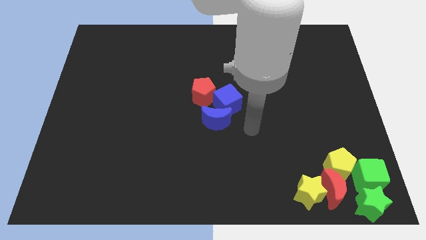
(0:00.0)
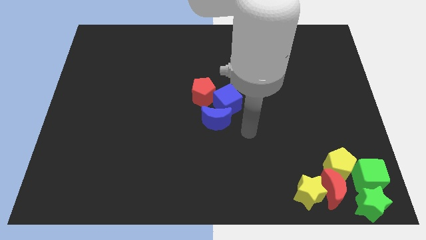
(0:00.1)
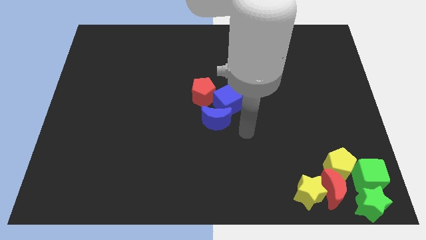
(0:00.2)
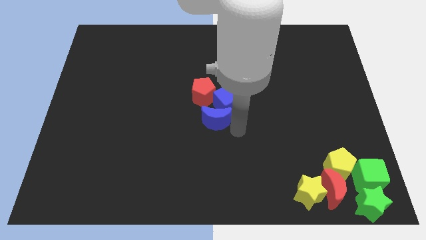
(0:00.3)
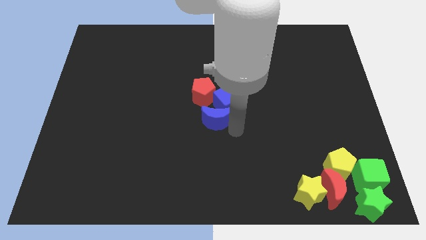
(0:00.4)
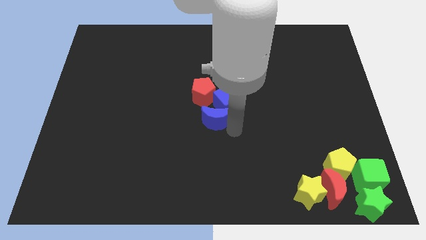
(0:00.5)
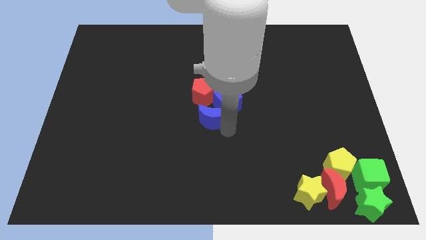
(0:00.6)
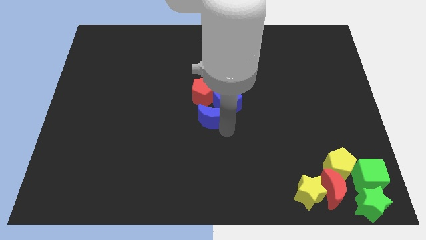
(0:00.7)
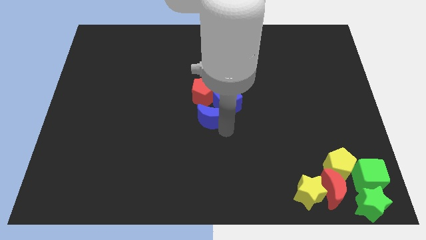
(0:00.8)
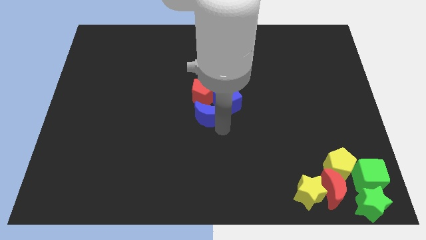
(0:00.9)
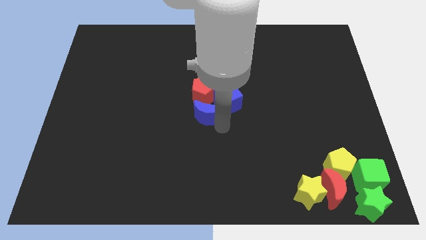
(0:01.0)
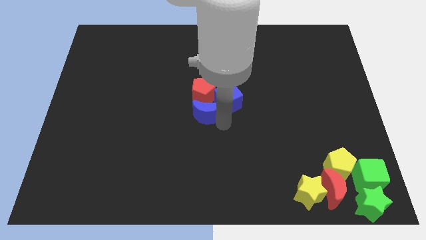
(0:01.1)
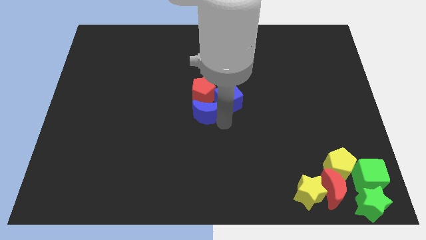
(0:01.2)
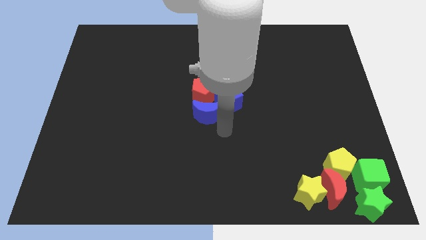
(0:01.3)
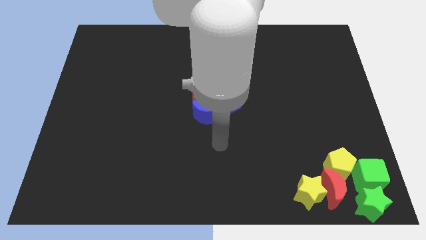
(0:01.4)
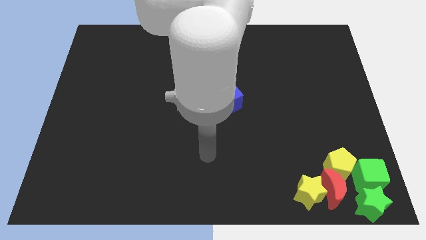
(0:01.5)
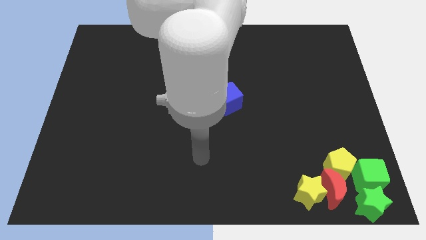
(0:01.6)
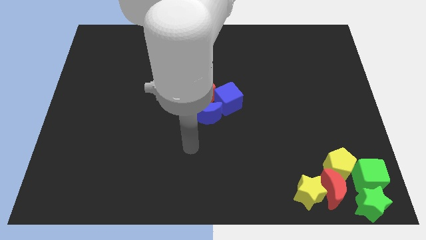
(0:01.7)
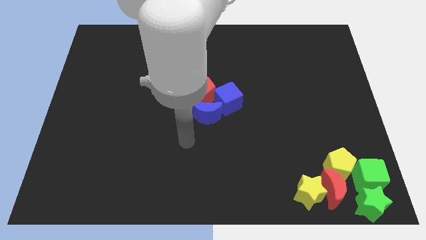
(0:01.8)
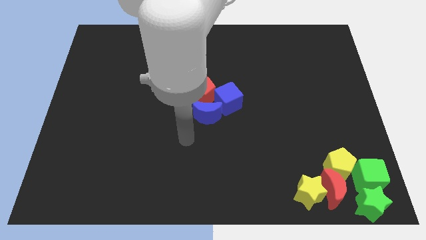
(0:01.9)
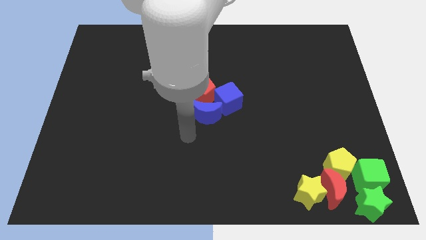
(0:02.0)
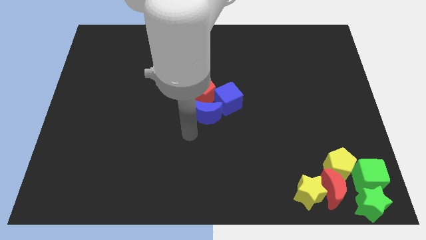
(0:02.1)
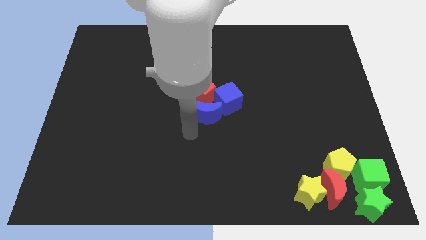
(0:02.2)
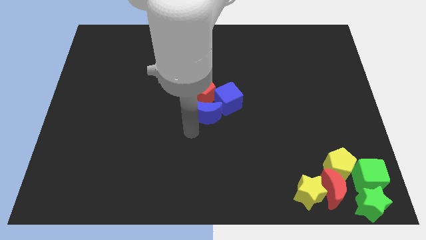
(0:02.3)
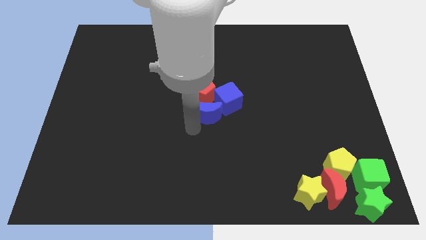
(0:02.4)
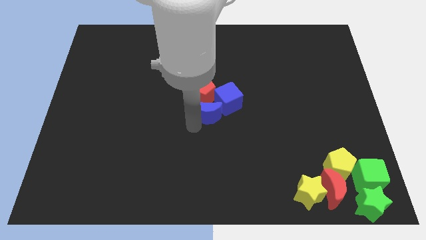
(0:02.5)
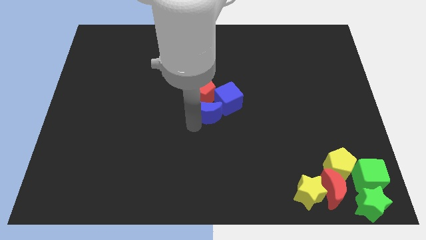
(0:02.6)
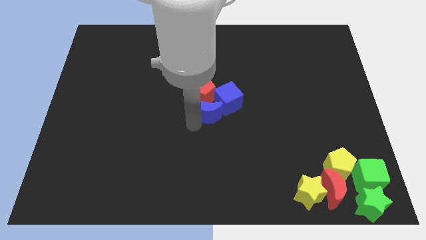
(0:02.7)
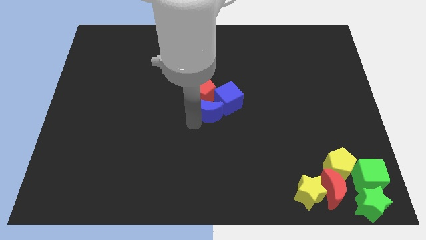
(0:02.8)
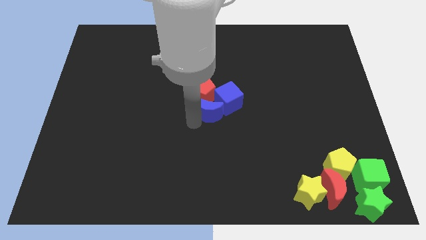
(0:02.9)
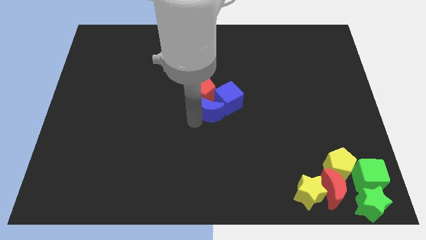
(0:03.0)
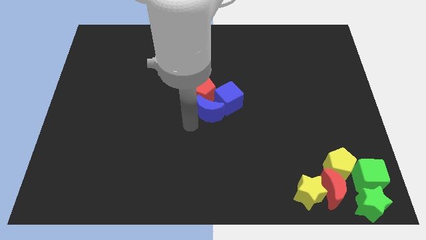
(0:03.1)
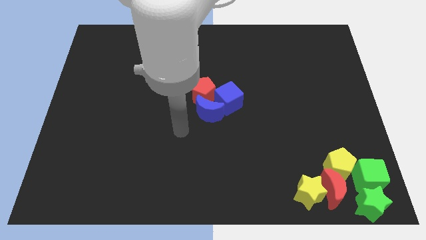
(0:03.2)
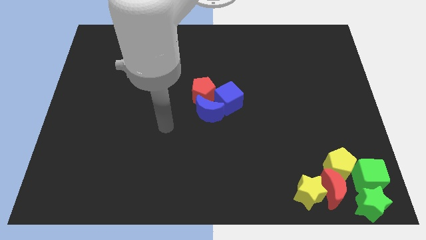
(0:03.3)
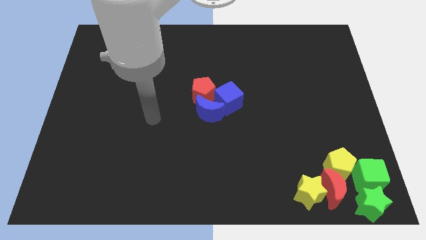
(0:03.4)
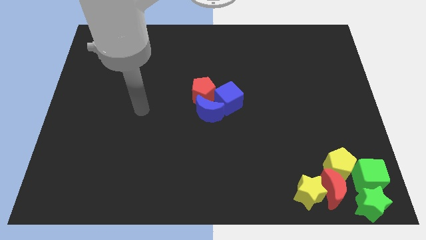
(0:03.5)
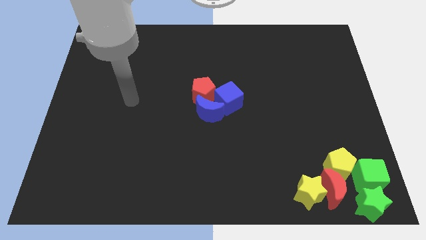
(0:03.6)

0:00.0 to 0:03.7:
push blue moon into blue cube and red pentagon

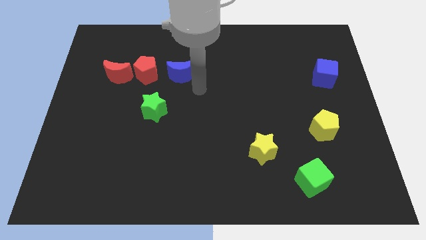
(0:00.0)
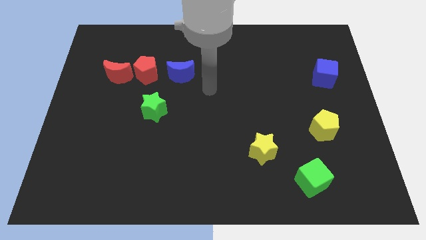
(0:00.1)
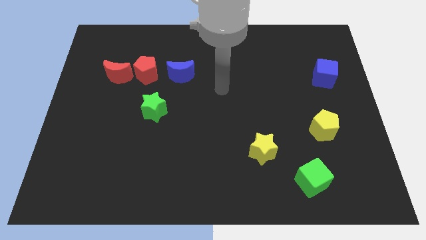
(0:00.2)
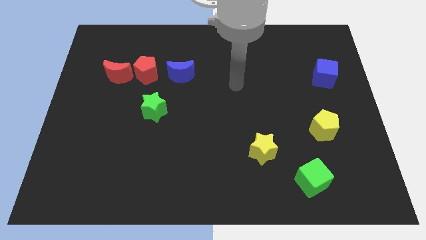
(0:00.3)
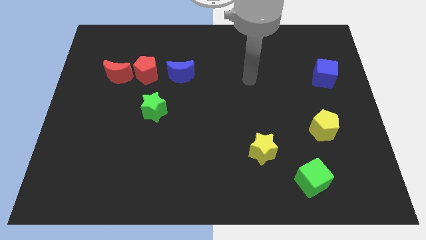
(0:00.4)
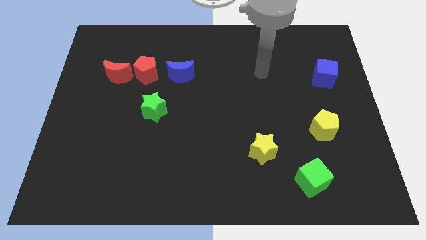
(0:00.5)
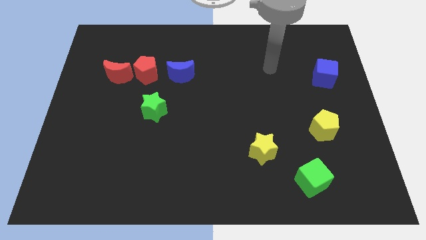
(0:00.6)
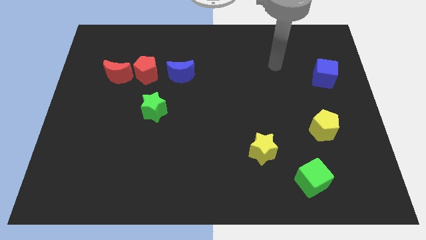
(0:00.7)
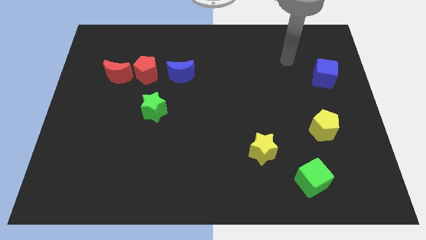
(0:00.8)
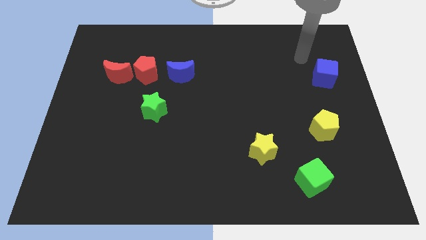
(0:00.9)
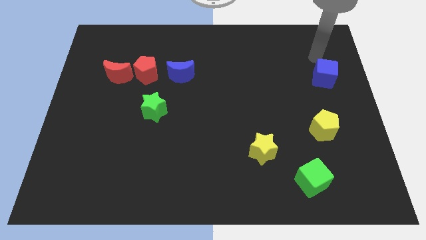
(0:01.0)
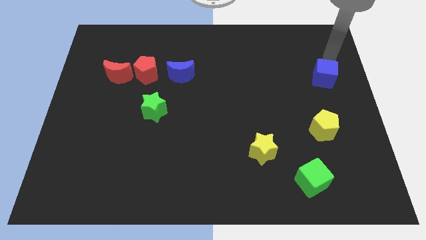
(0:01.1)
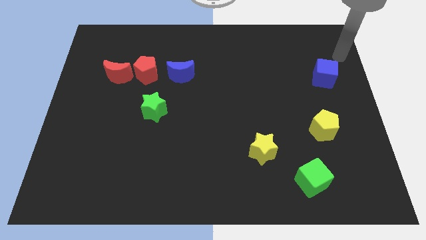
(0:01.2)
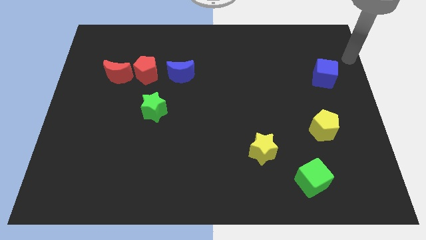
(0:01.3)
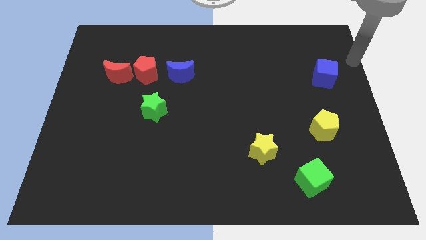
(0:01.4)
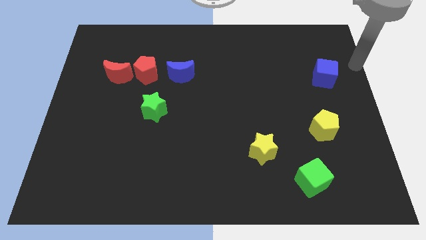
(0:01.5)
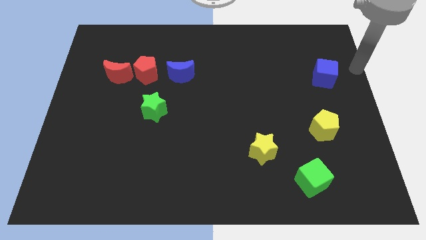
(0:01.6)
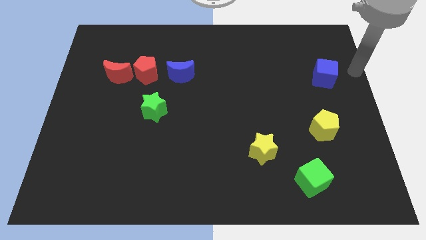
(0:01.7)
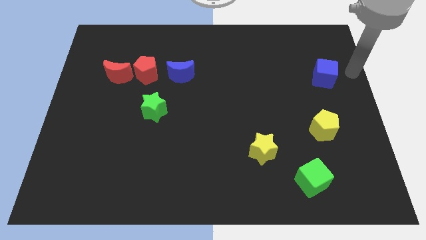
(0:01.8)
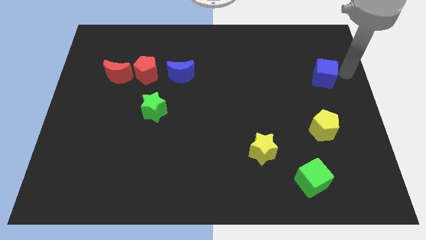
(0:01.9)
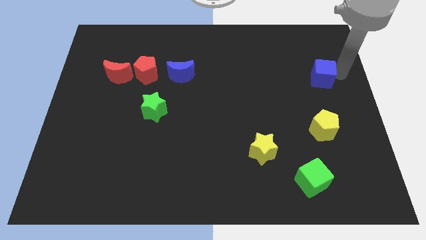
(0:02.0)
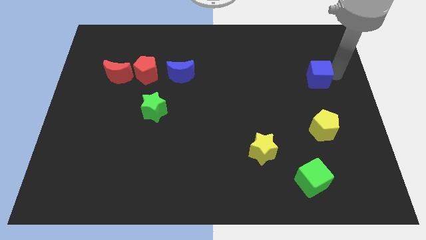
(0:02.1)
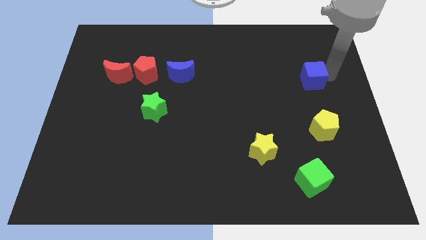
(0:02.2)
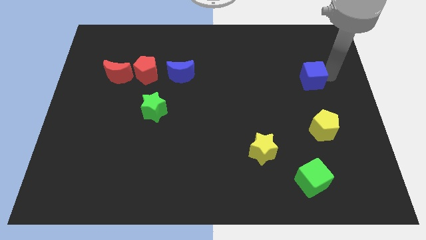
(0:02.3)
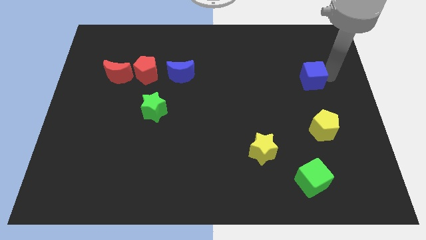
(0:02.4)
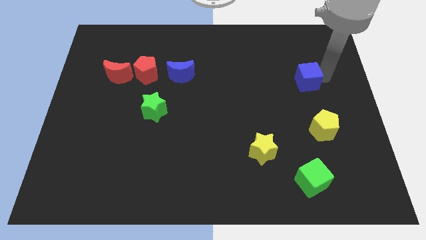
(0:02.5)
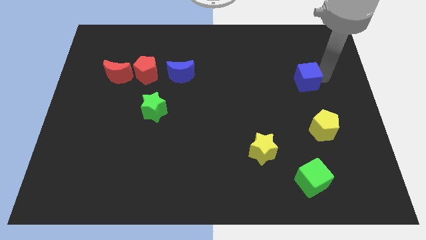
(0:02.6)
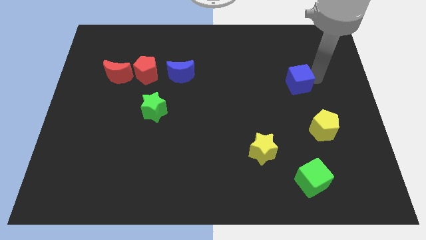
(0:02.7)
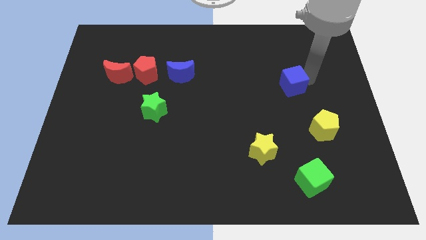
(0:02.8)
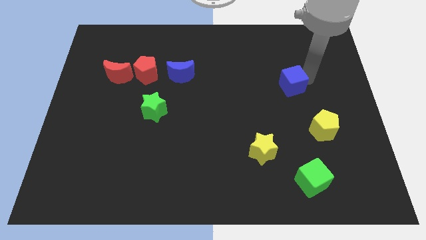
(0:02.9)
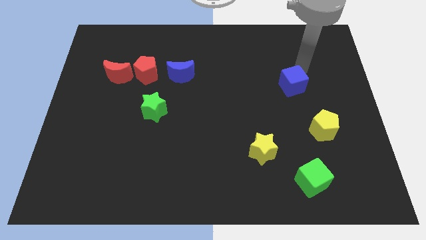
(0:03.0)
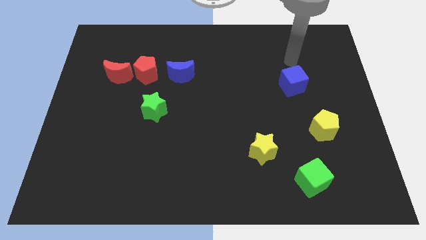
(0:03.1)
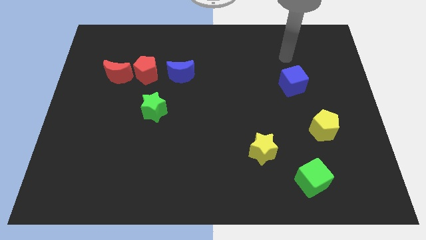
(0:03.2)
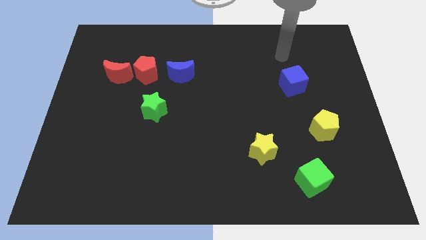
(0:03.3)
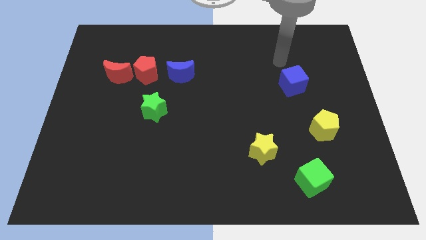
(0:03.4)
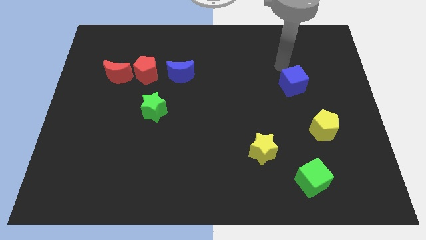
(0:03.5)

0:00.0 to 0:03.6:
drag the blue cube towards left side of the board

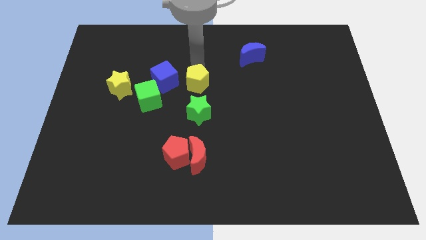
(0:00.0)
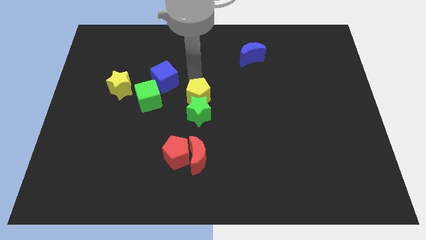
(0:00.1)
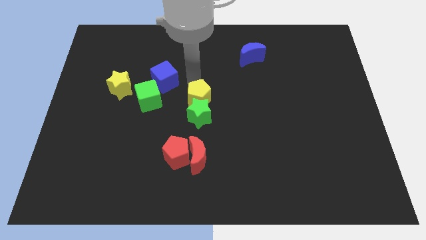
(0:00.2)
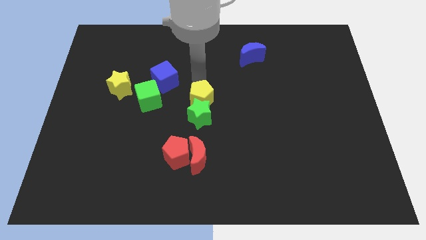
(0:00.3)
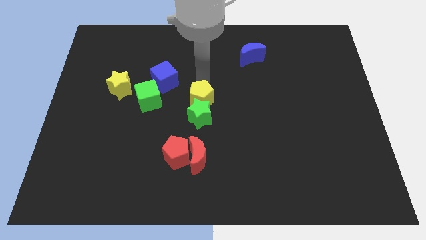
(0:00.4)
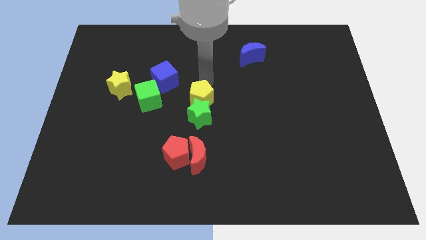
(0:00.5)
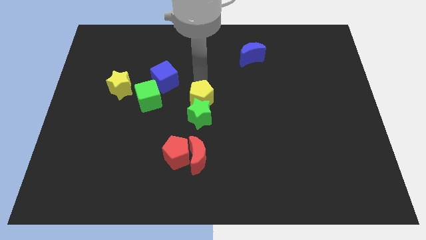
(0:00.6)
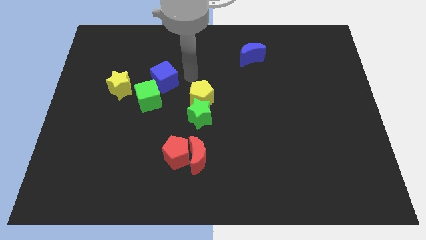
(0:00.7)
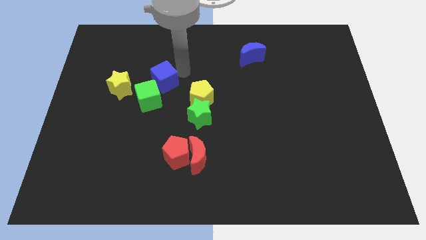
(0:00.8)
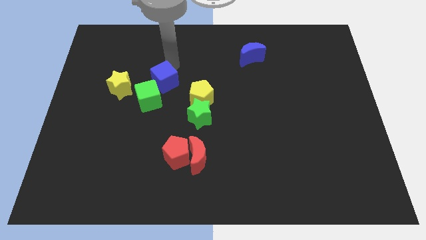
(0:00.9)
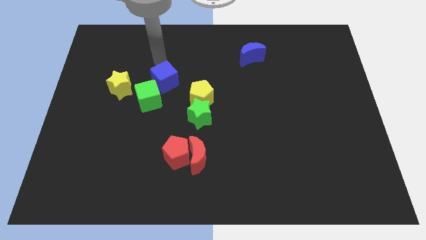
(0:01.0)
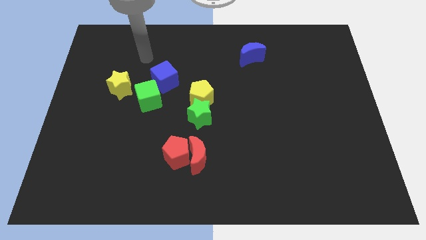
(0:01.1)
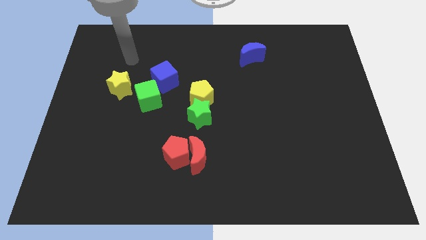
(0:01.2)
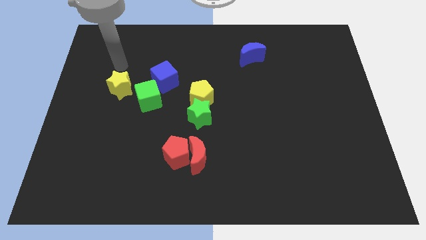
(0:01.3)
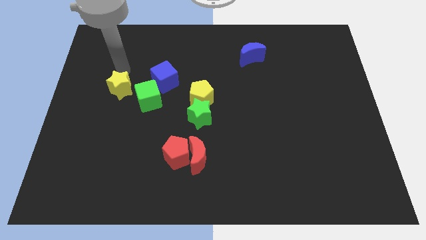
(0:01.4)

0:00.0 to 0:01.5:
push the yellow pentagon into green star

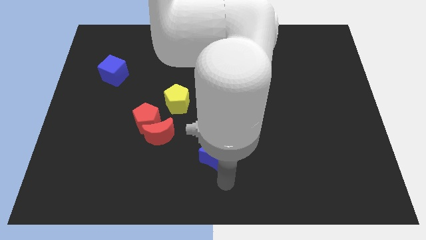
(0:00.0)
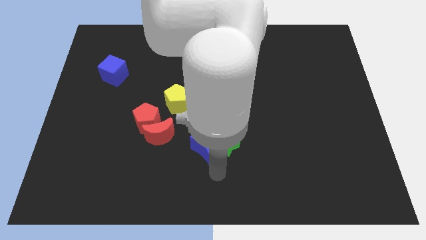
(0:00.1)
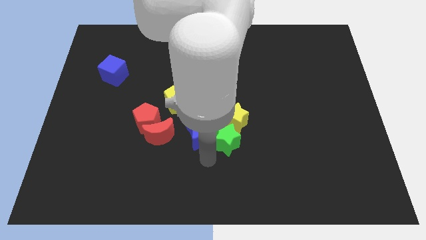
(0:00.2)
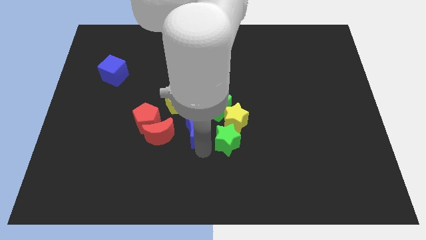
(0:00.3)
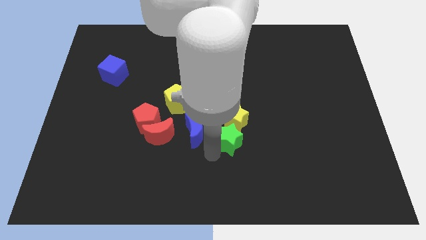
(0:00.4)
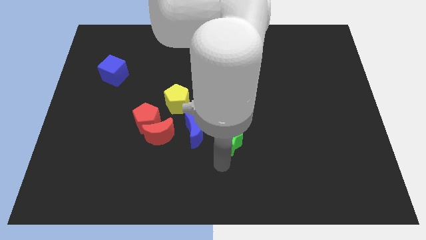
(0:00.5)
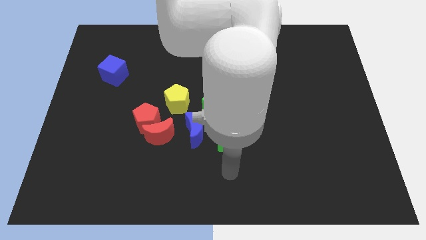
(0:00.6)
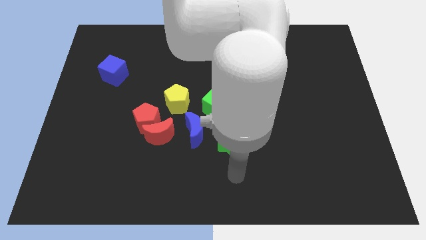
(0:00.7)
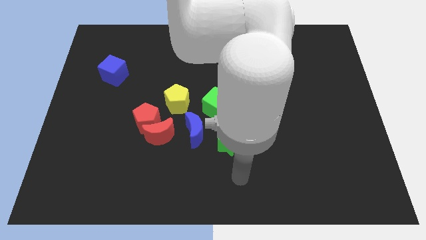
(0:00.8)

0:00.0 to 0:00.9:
separate the blue moon and green star
